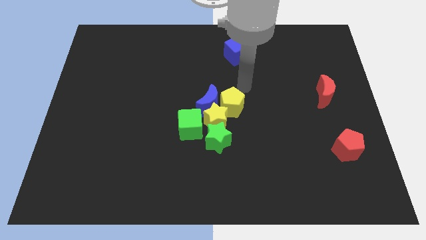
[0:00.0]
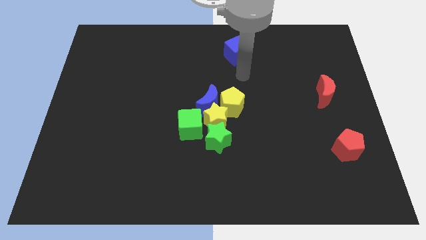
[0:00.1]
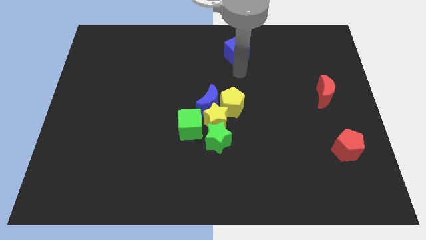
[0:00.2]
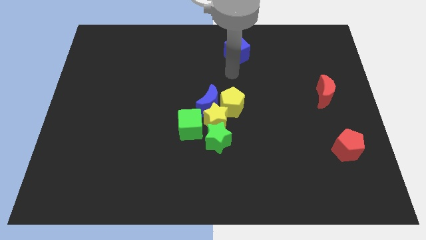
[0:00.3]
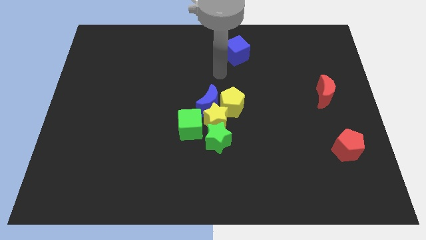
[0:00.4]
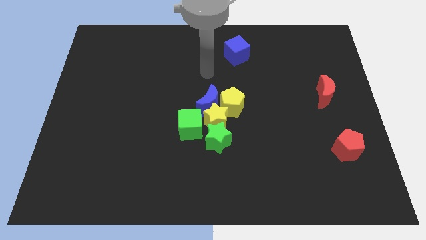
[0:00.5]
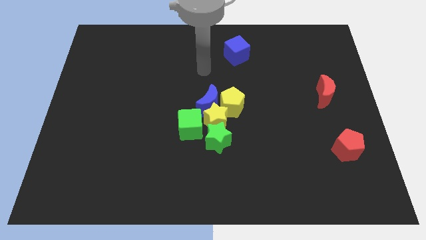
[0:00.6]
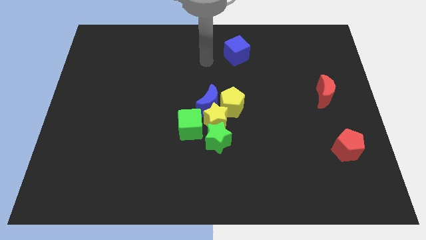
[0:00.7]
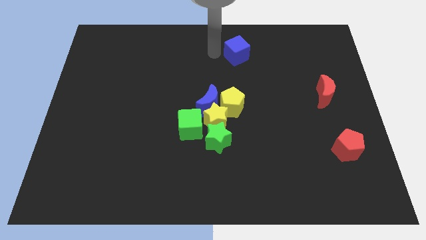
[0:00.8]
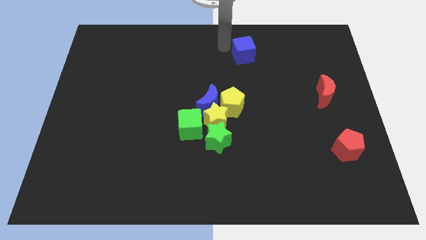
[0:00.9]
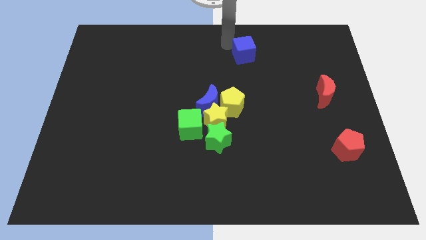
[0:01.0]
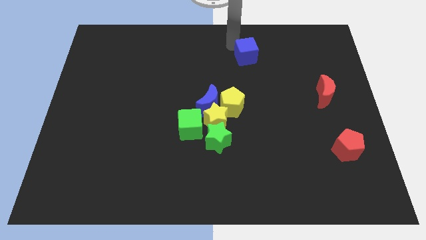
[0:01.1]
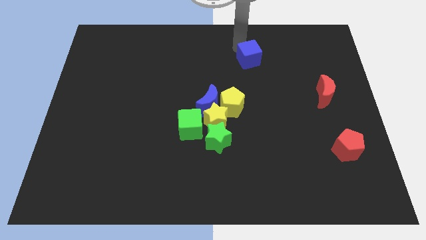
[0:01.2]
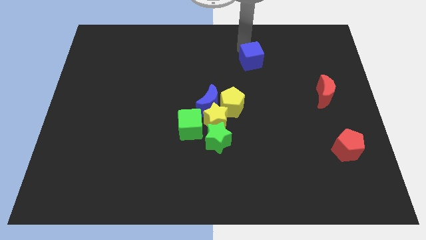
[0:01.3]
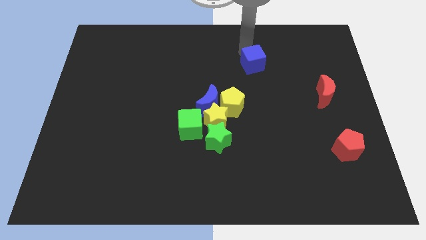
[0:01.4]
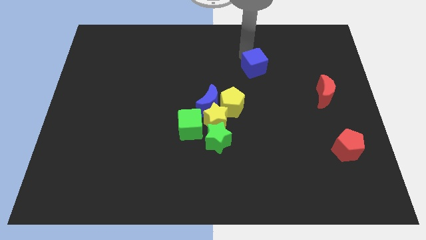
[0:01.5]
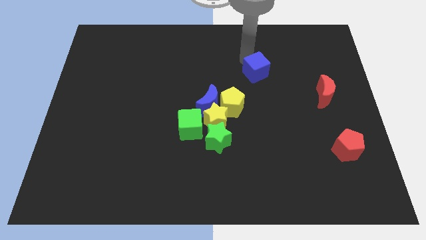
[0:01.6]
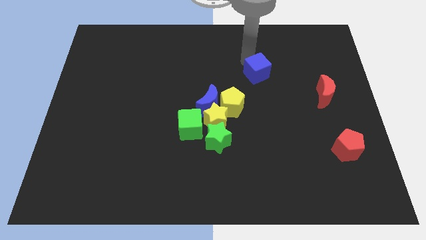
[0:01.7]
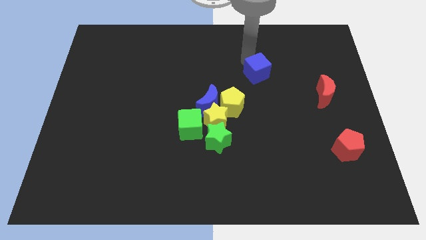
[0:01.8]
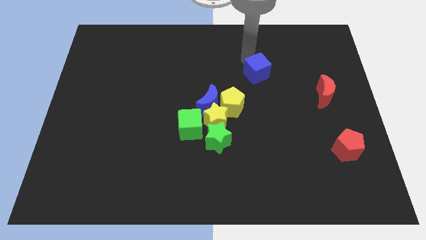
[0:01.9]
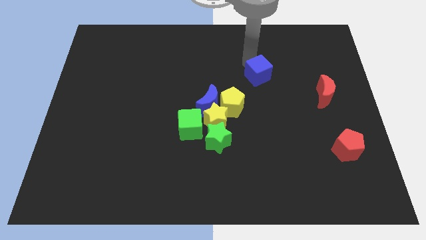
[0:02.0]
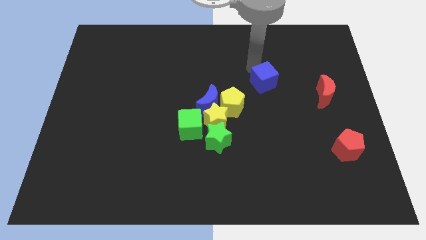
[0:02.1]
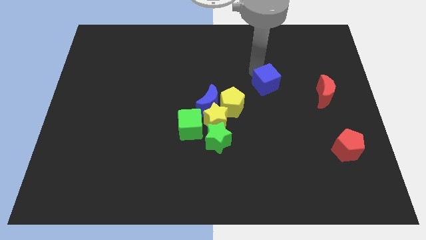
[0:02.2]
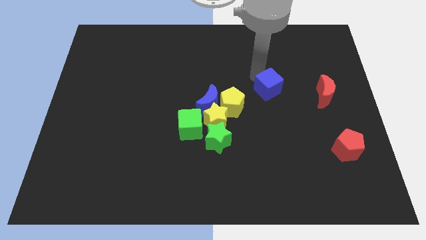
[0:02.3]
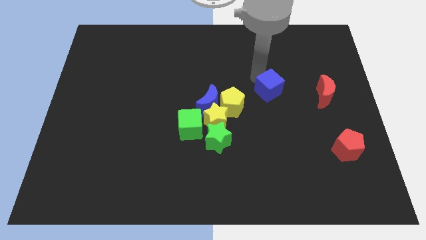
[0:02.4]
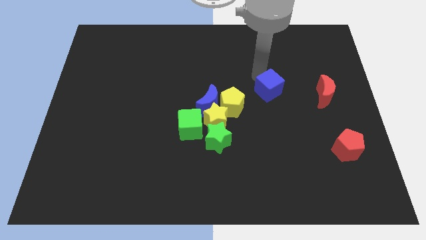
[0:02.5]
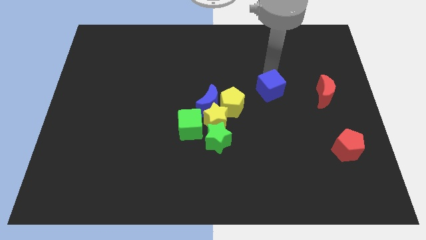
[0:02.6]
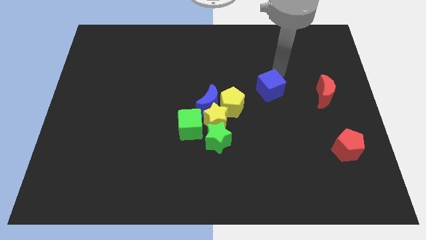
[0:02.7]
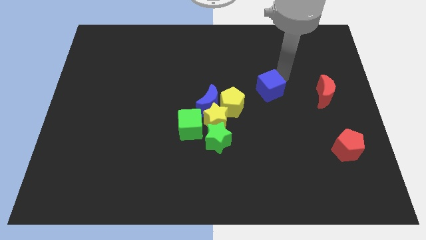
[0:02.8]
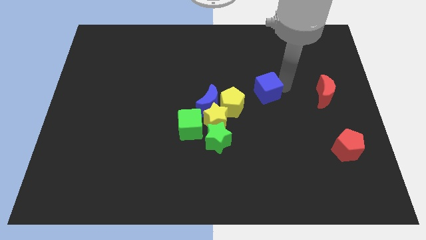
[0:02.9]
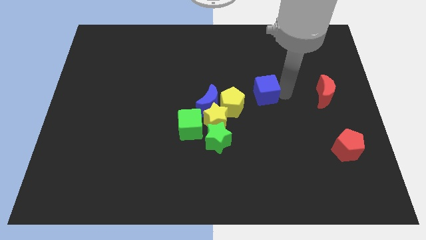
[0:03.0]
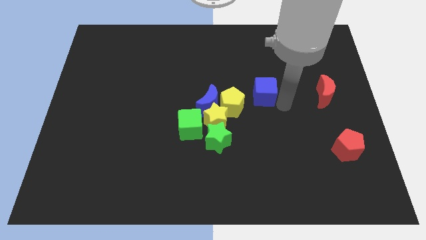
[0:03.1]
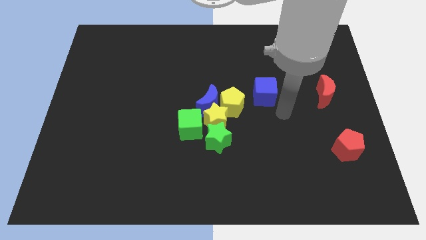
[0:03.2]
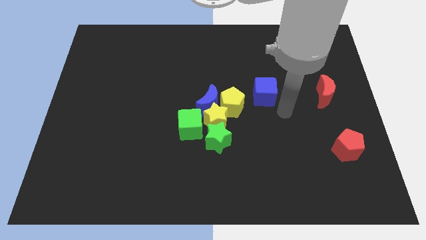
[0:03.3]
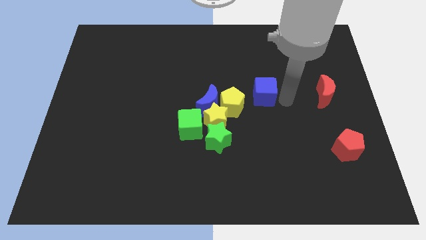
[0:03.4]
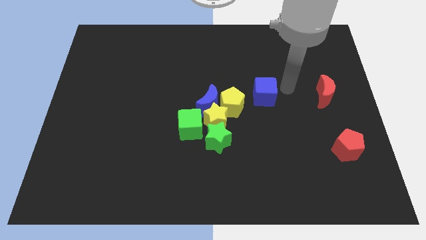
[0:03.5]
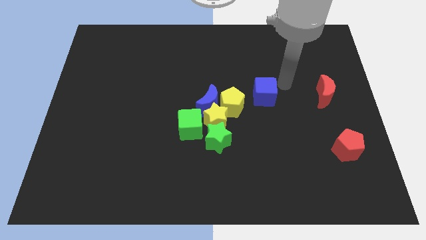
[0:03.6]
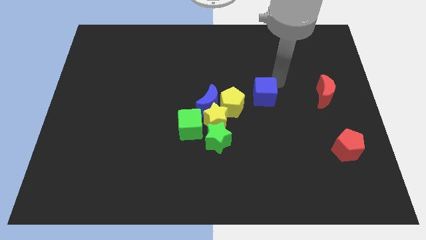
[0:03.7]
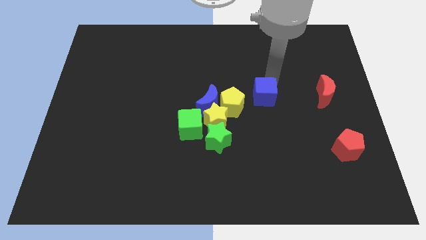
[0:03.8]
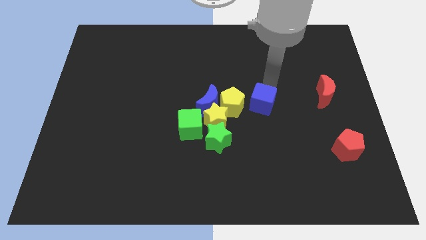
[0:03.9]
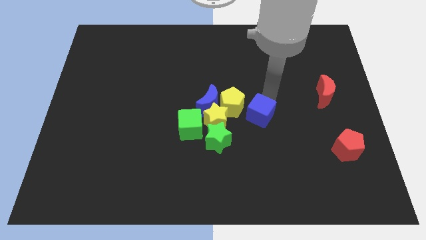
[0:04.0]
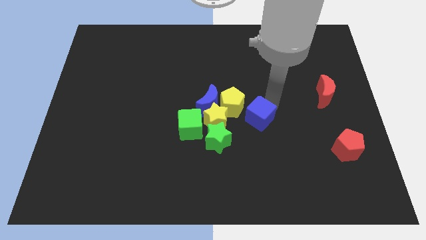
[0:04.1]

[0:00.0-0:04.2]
place the blue cube to the right of the yellow pentagon

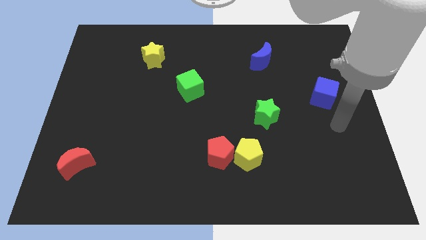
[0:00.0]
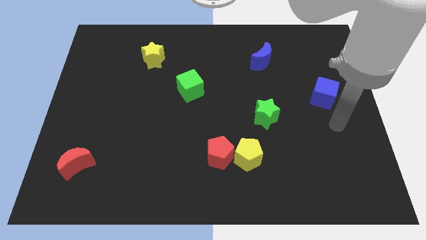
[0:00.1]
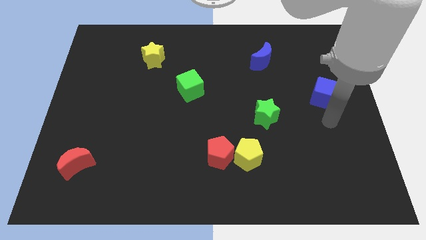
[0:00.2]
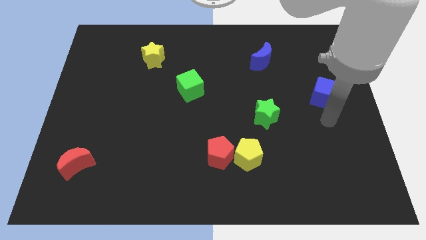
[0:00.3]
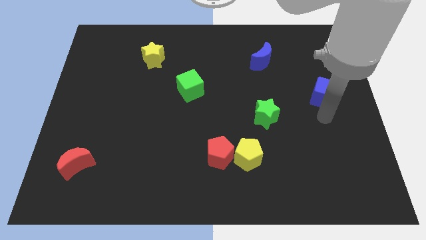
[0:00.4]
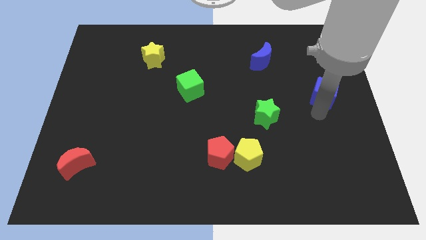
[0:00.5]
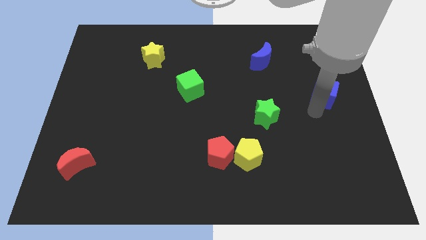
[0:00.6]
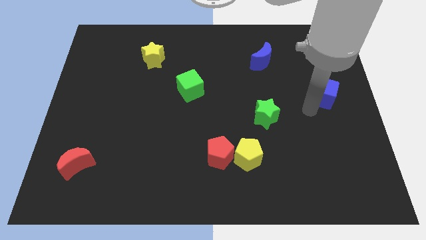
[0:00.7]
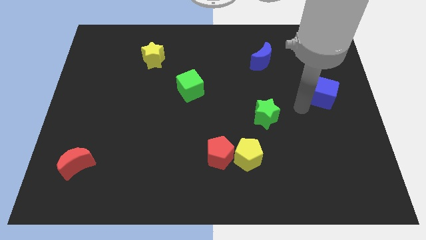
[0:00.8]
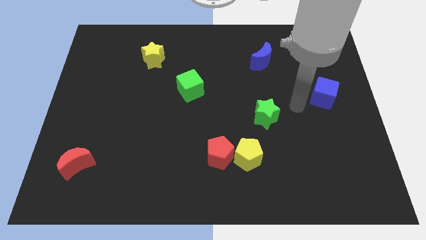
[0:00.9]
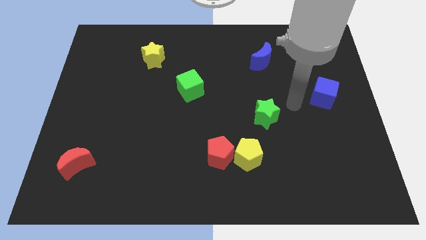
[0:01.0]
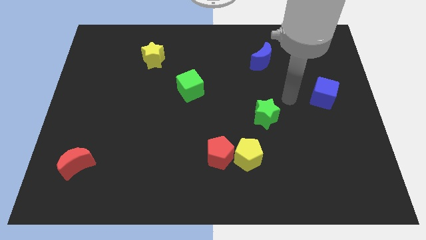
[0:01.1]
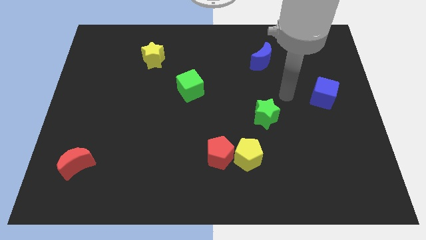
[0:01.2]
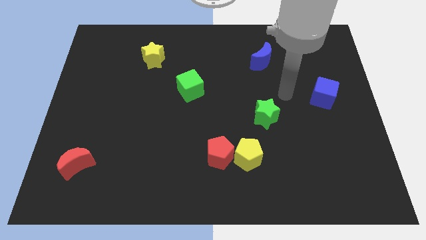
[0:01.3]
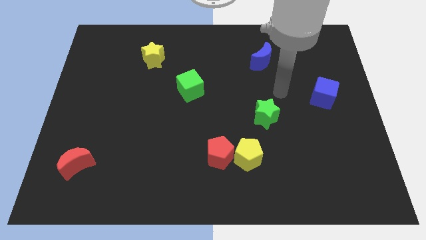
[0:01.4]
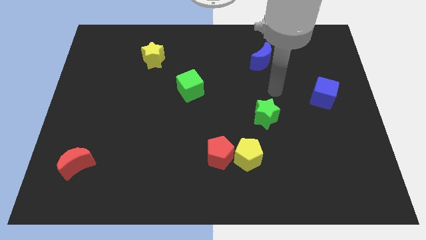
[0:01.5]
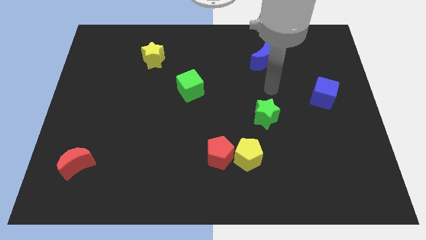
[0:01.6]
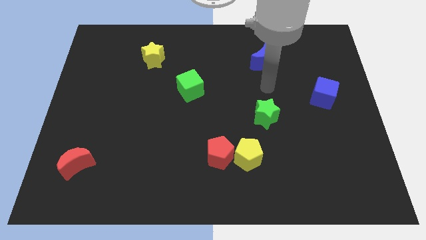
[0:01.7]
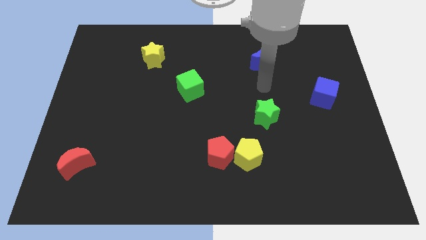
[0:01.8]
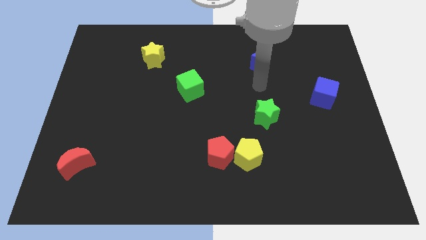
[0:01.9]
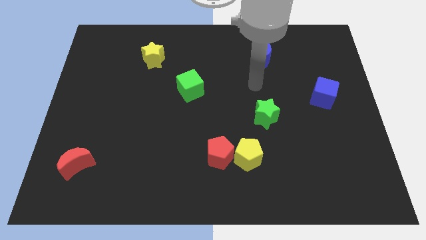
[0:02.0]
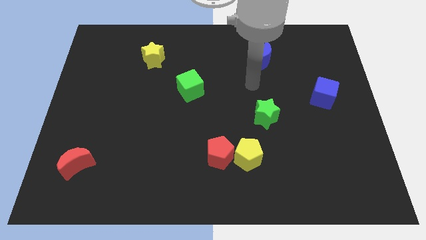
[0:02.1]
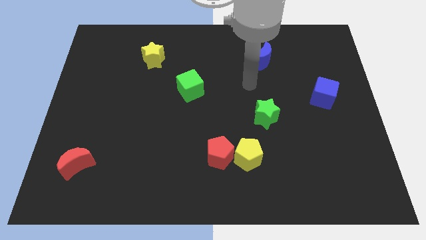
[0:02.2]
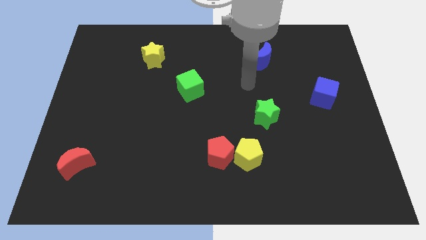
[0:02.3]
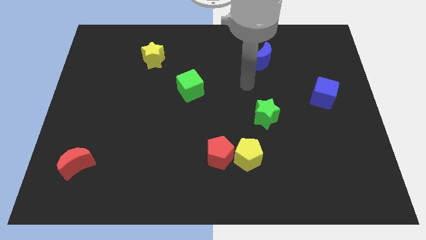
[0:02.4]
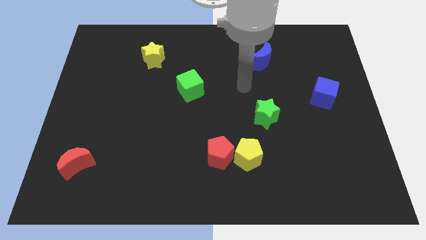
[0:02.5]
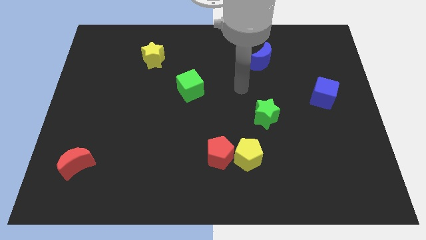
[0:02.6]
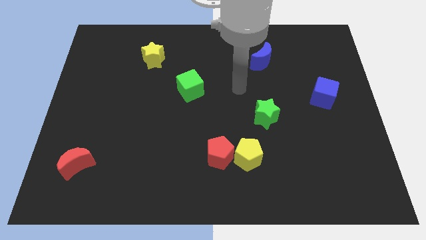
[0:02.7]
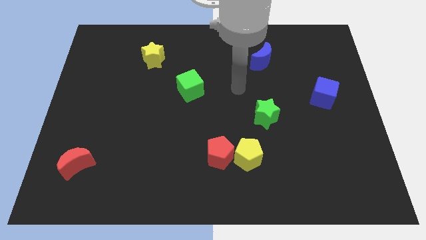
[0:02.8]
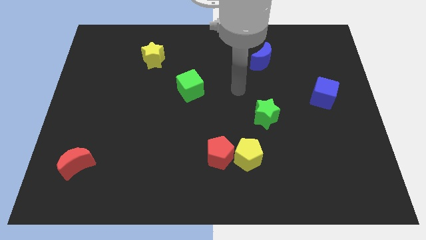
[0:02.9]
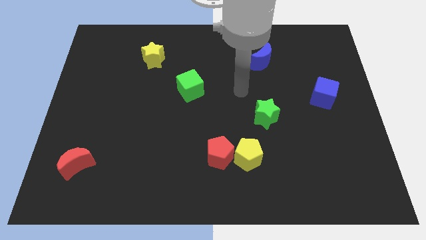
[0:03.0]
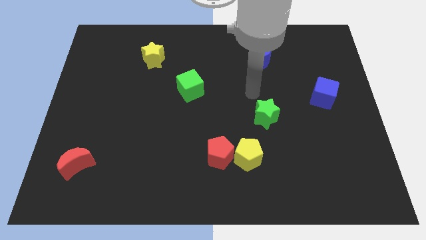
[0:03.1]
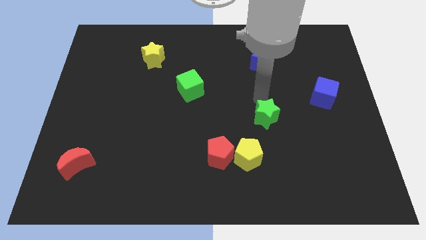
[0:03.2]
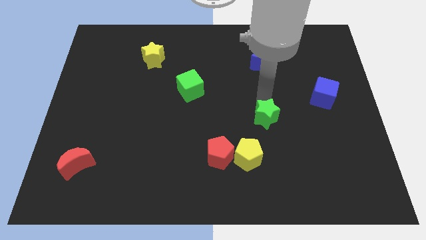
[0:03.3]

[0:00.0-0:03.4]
move your arm above the green star

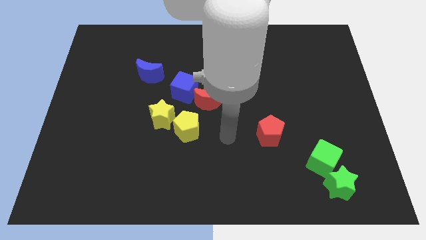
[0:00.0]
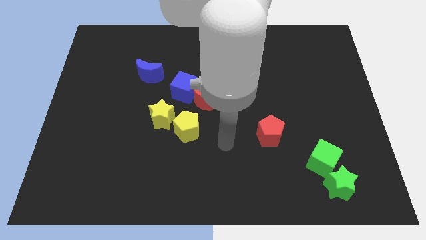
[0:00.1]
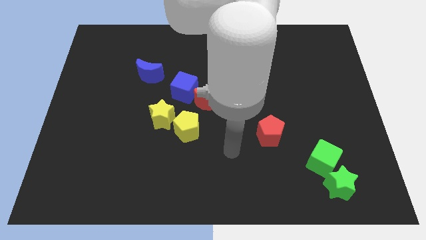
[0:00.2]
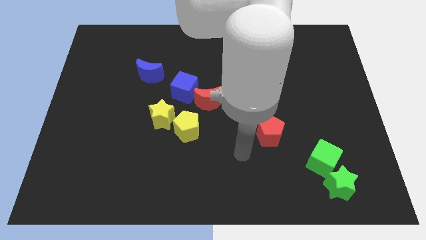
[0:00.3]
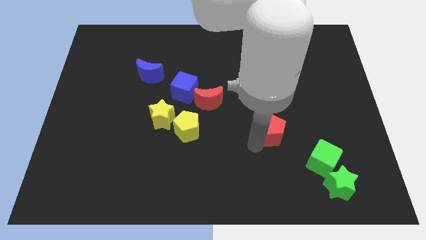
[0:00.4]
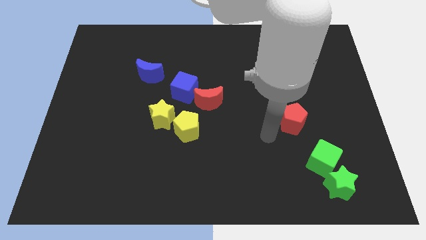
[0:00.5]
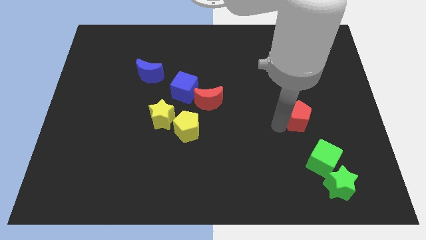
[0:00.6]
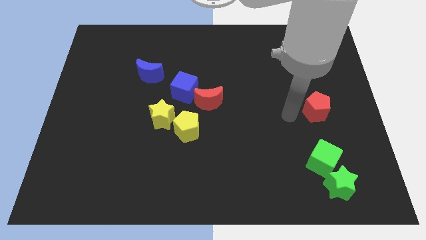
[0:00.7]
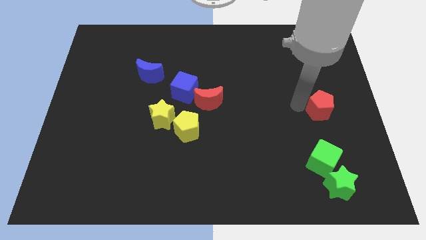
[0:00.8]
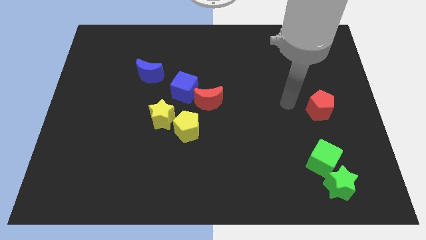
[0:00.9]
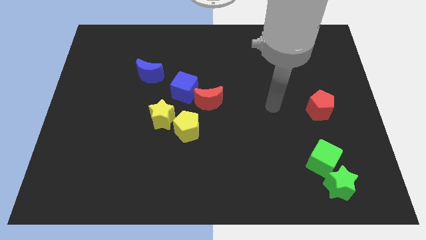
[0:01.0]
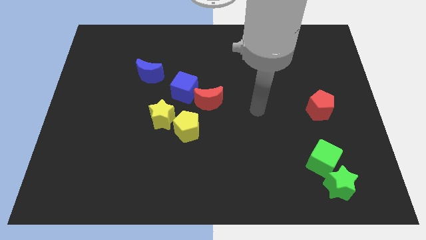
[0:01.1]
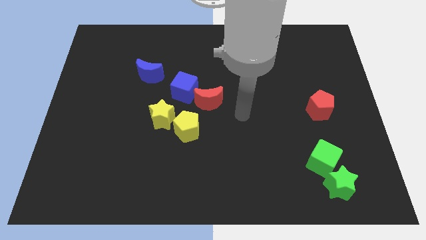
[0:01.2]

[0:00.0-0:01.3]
move the red pentagon to the right center of the board

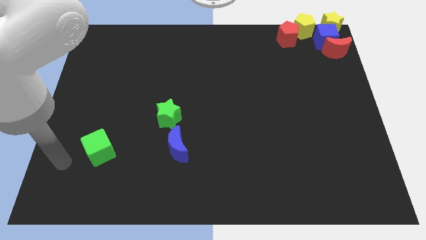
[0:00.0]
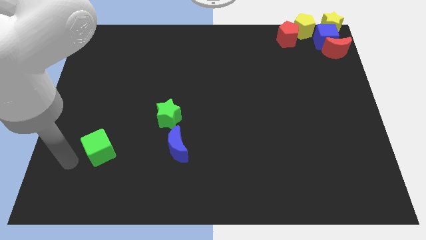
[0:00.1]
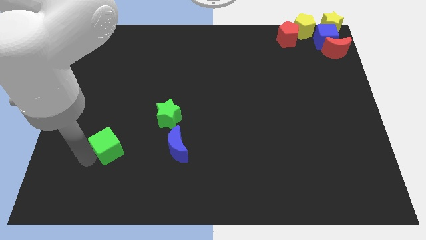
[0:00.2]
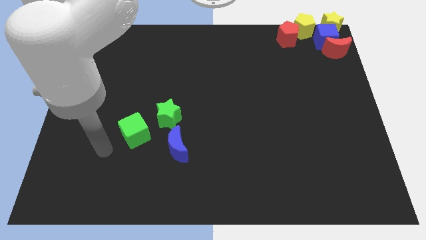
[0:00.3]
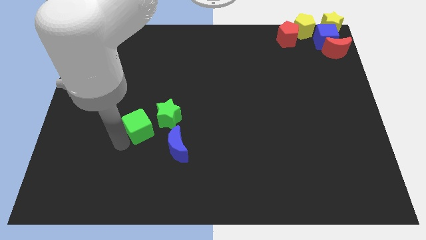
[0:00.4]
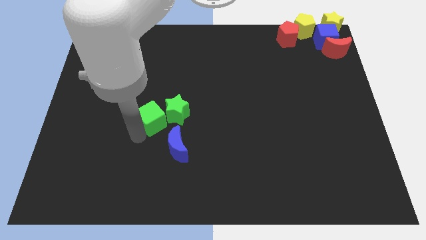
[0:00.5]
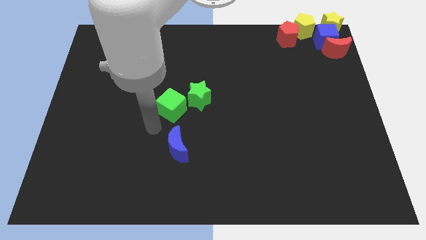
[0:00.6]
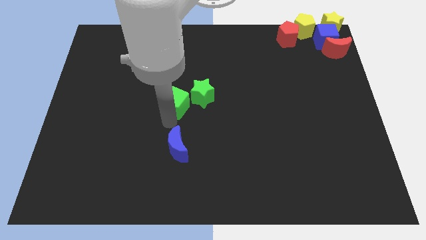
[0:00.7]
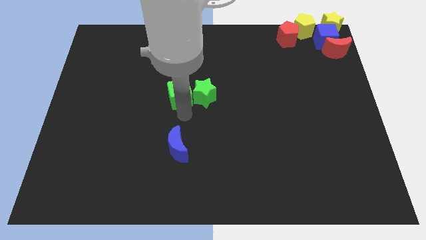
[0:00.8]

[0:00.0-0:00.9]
place the green blocks at the center of the board
